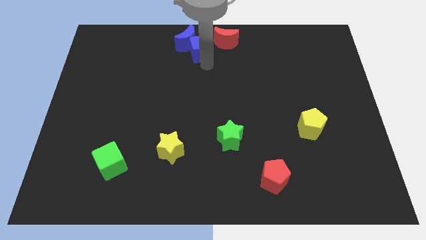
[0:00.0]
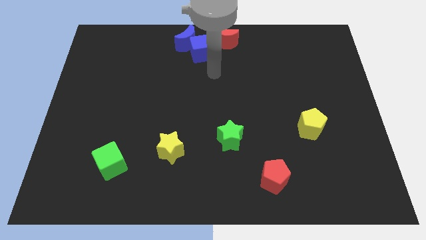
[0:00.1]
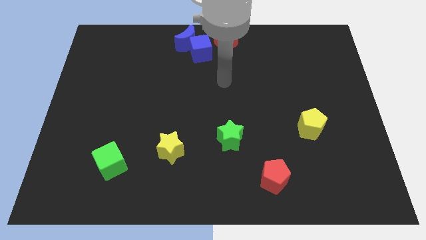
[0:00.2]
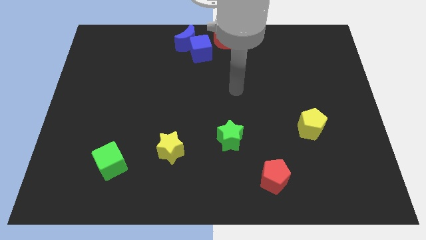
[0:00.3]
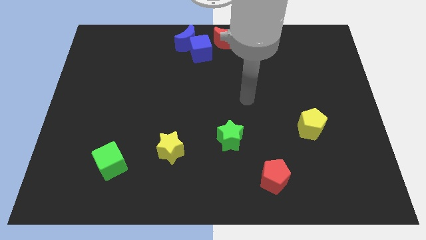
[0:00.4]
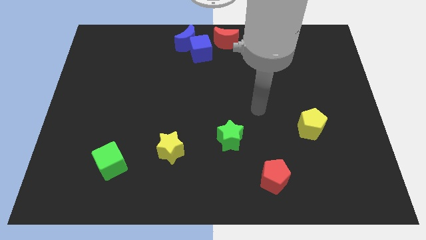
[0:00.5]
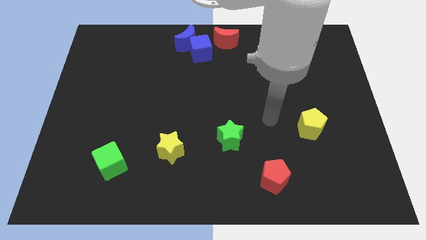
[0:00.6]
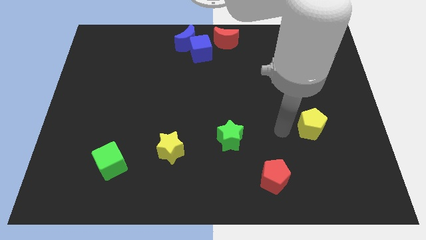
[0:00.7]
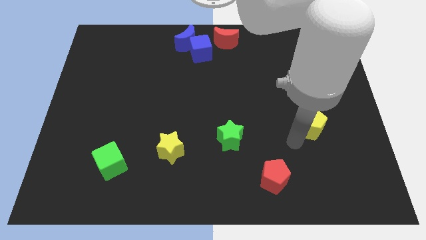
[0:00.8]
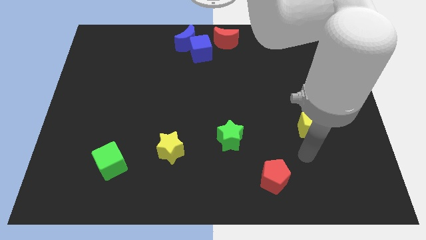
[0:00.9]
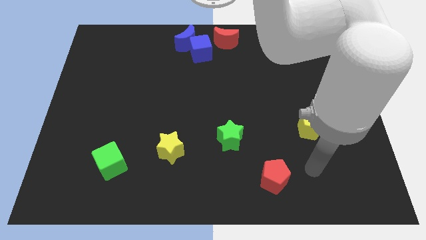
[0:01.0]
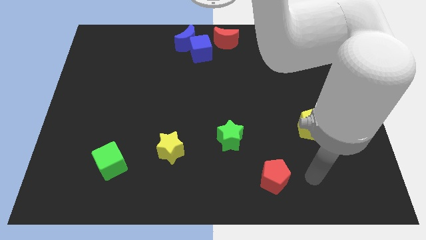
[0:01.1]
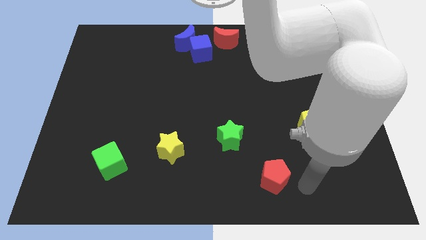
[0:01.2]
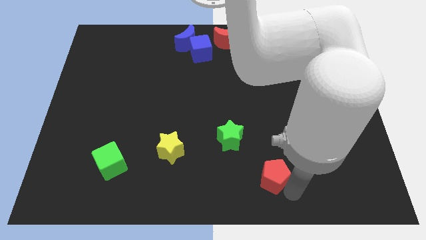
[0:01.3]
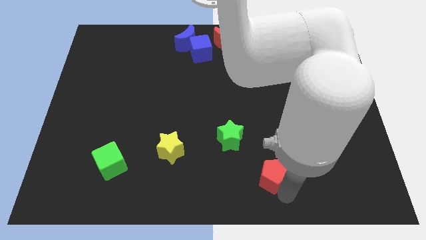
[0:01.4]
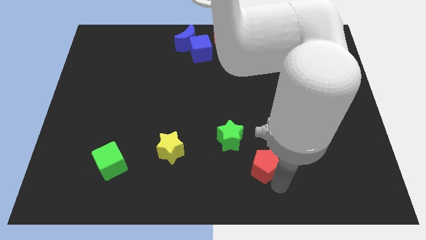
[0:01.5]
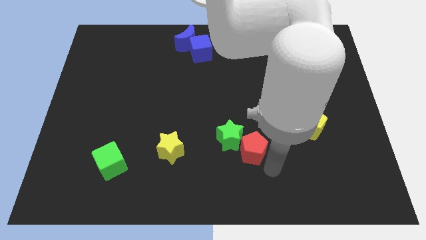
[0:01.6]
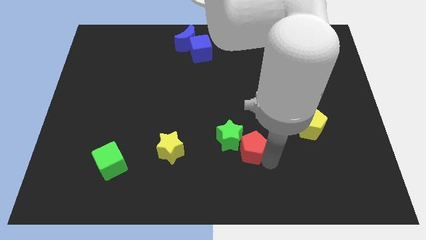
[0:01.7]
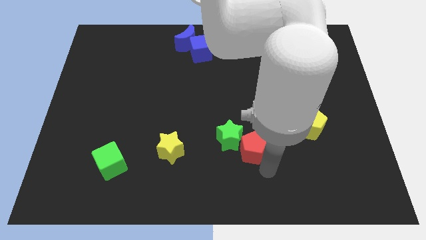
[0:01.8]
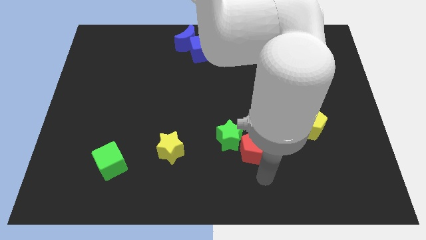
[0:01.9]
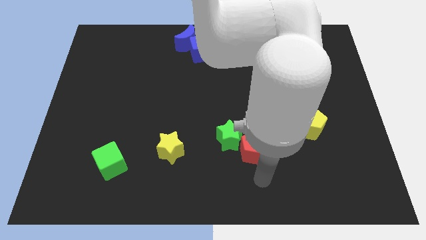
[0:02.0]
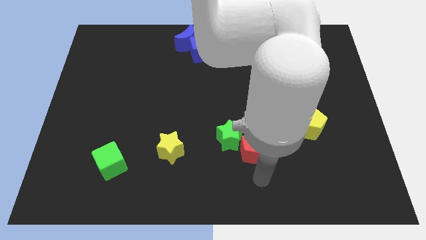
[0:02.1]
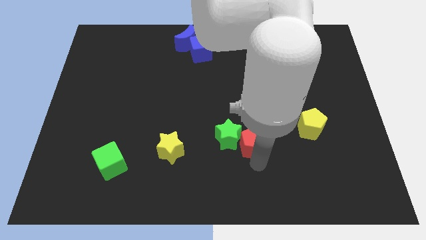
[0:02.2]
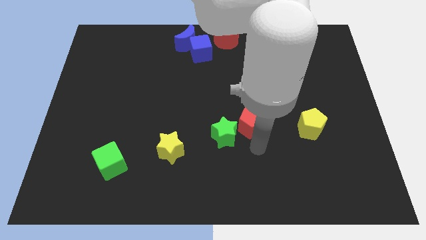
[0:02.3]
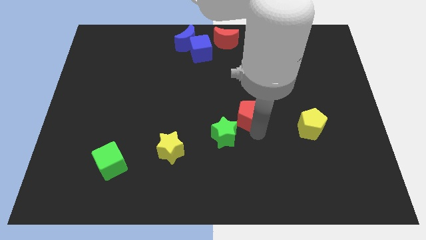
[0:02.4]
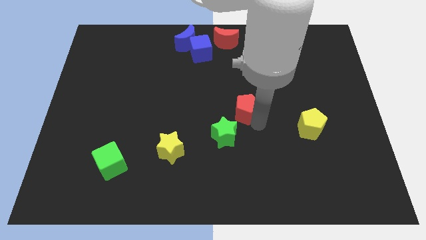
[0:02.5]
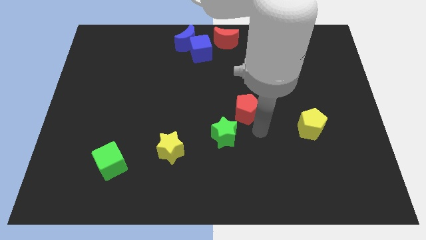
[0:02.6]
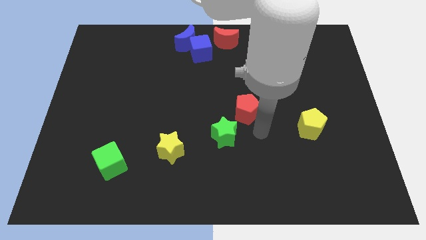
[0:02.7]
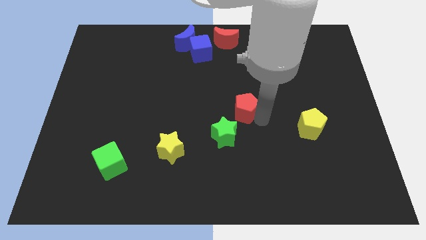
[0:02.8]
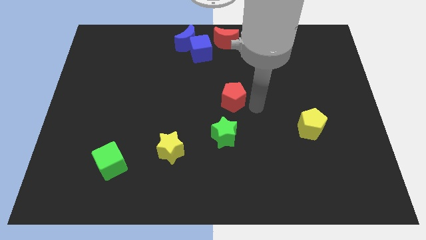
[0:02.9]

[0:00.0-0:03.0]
place the red pentagon at the center of the board

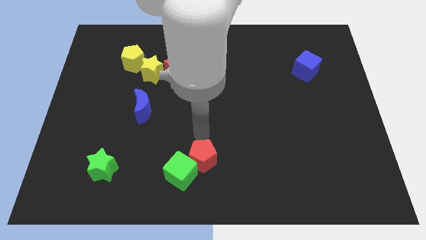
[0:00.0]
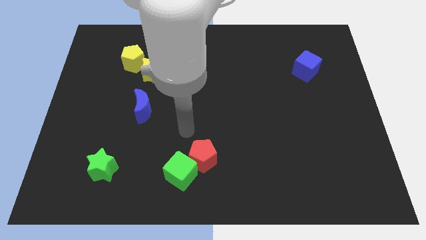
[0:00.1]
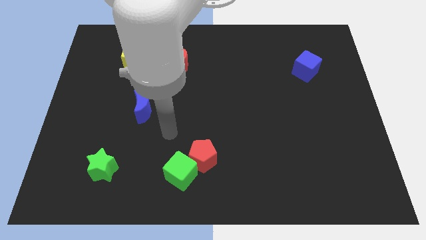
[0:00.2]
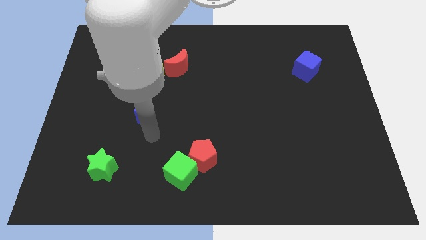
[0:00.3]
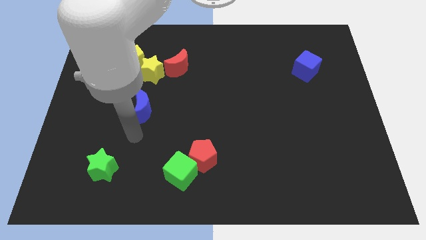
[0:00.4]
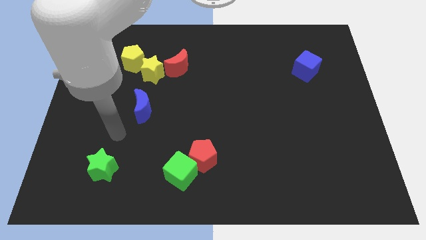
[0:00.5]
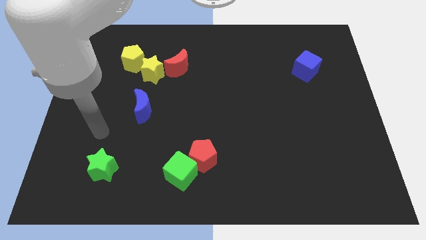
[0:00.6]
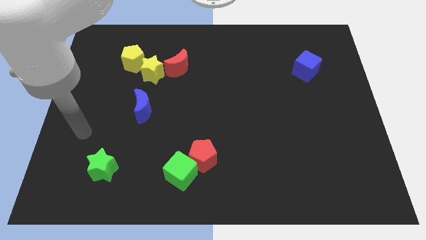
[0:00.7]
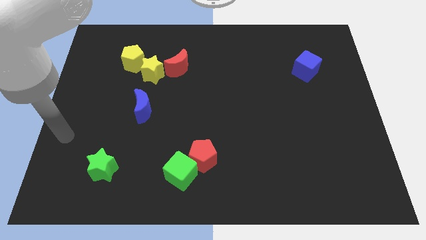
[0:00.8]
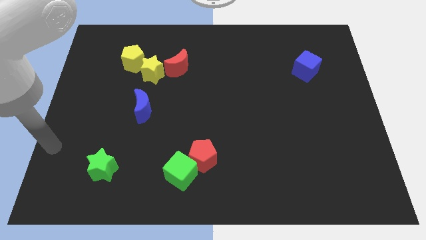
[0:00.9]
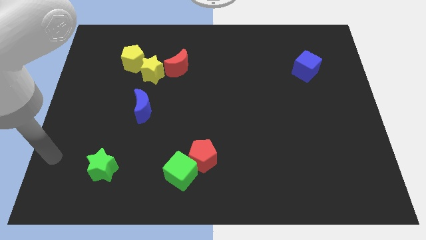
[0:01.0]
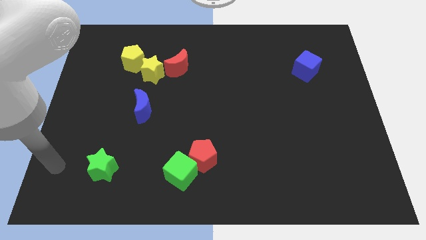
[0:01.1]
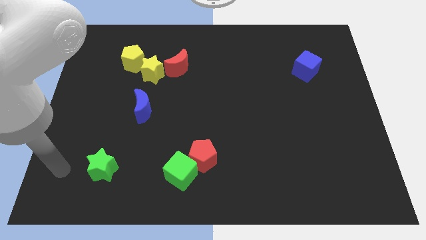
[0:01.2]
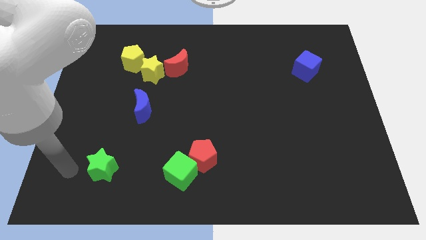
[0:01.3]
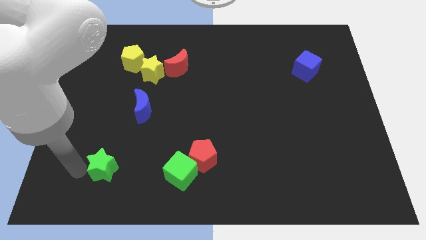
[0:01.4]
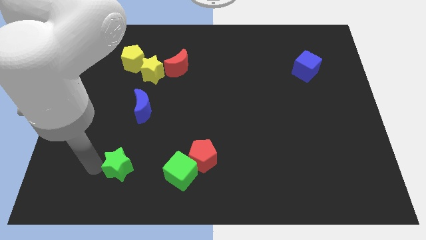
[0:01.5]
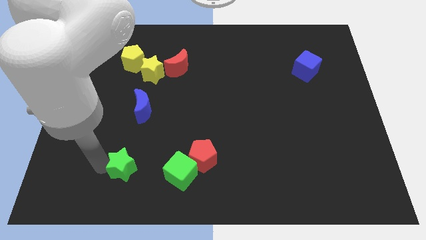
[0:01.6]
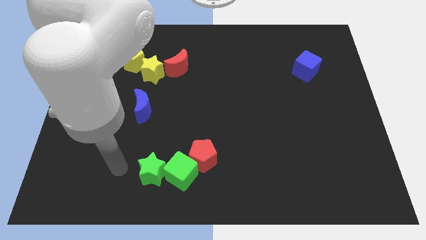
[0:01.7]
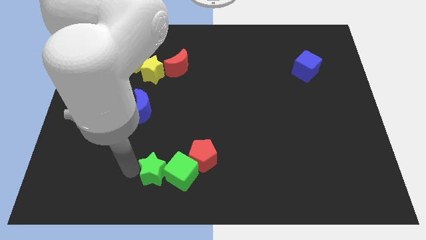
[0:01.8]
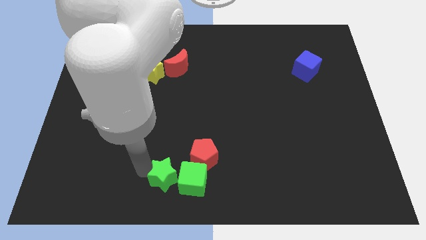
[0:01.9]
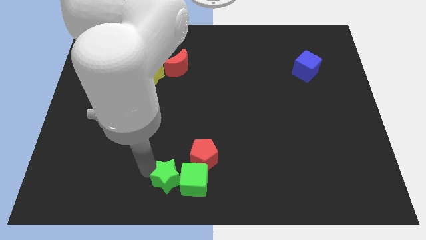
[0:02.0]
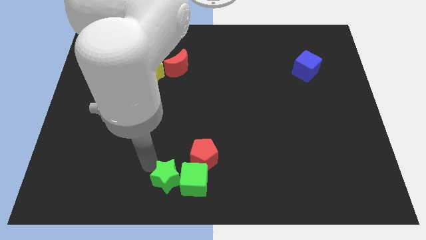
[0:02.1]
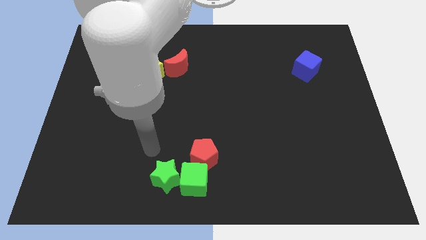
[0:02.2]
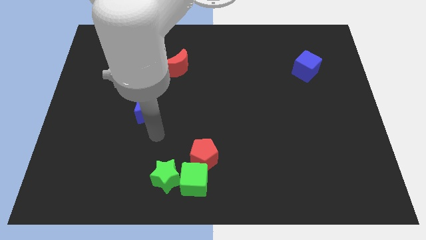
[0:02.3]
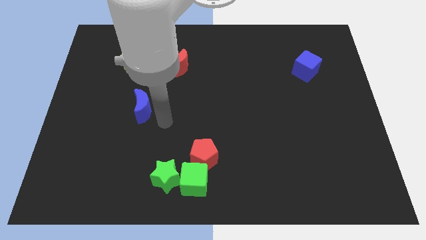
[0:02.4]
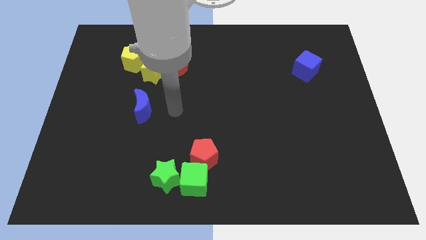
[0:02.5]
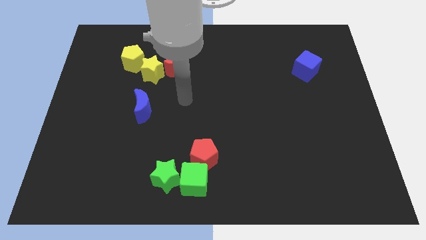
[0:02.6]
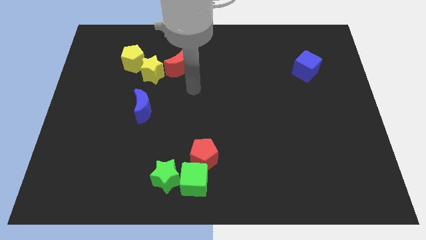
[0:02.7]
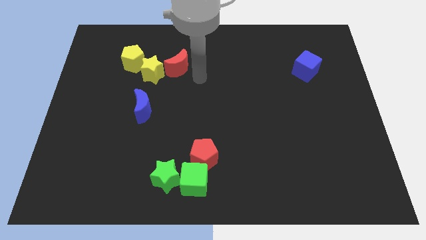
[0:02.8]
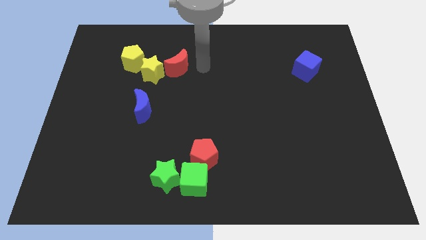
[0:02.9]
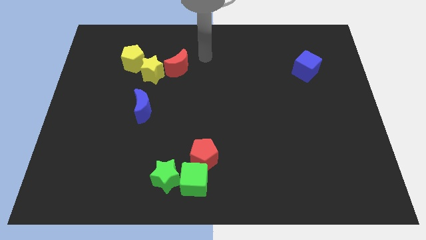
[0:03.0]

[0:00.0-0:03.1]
move green star into green cube

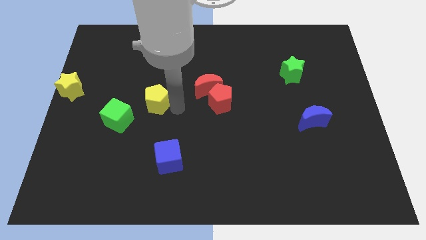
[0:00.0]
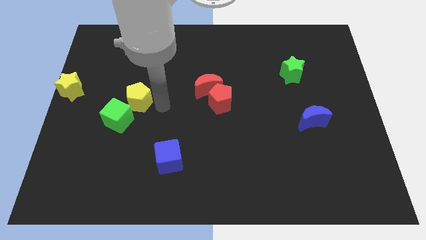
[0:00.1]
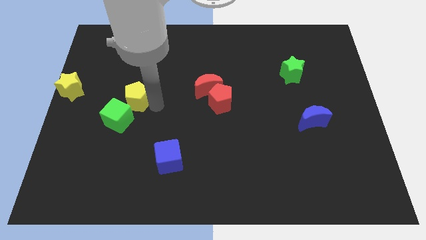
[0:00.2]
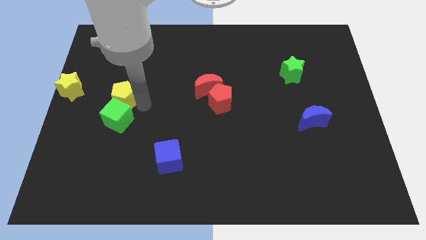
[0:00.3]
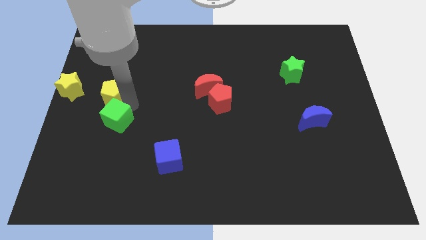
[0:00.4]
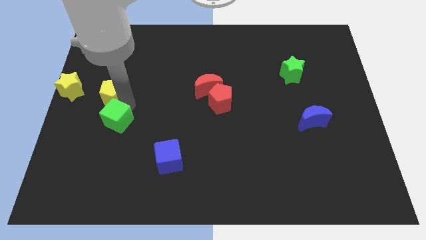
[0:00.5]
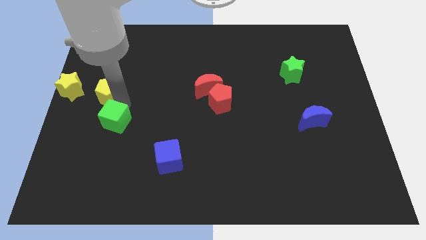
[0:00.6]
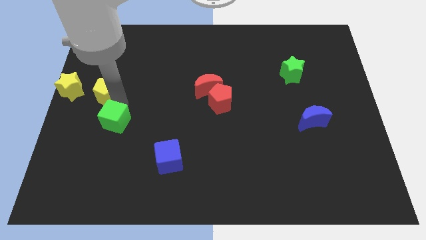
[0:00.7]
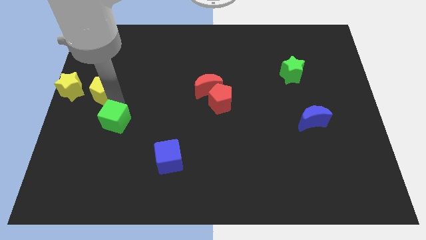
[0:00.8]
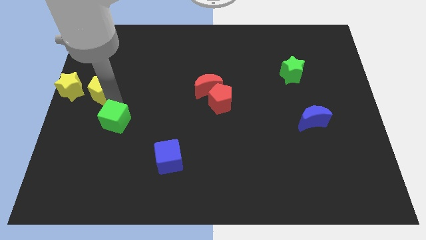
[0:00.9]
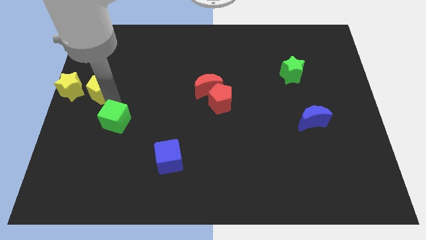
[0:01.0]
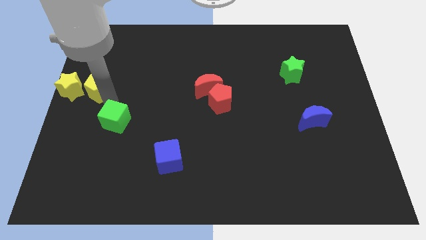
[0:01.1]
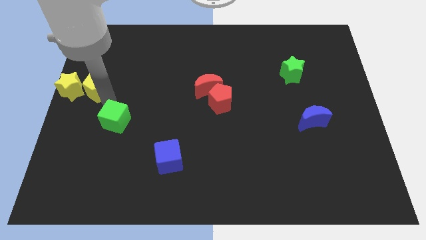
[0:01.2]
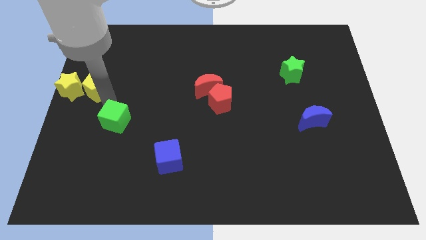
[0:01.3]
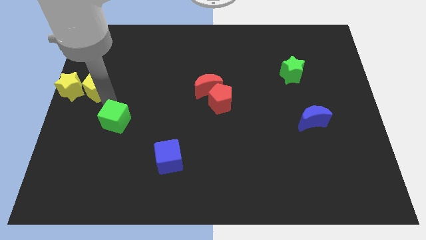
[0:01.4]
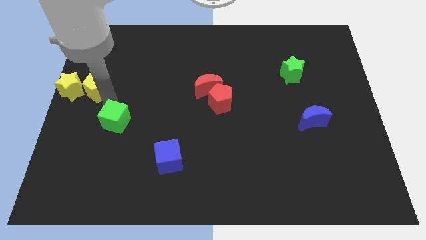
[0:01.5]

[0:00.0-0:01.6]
push the yellow pentagon close to the yellow star

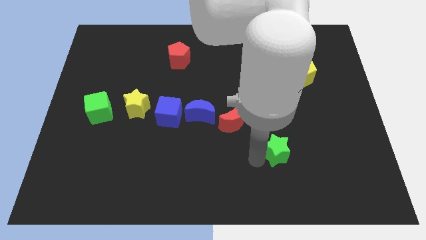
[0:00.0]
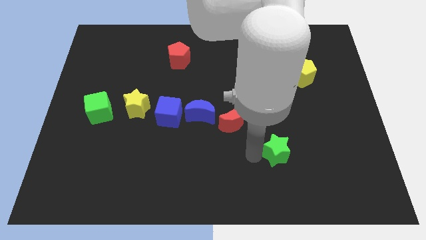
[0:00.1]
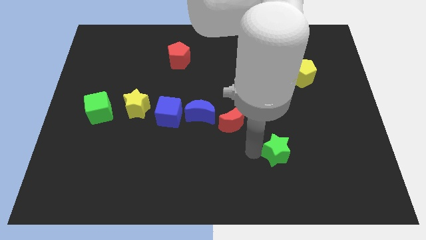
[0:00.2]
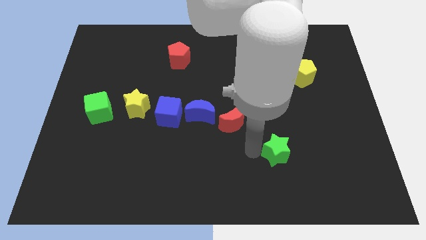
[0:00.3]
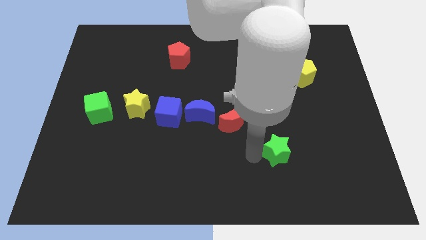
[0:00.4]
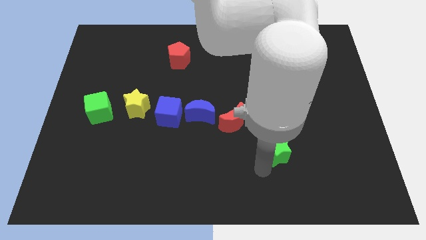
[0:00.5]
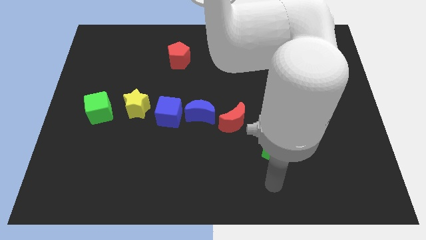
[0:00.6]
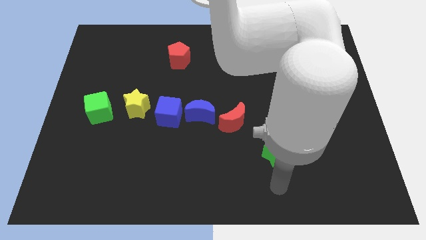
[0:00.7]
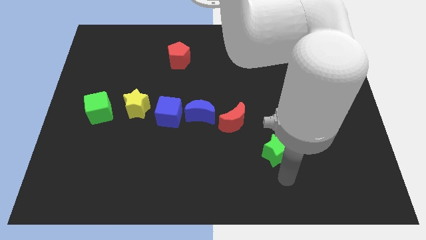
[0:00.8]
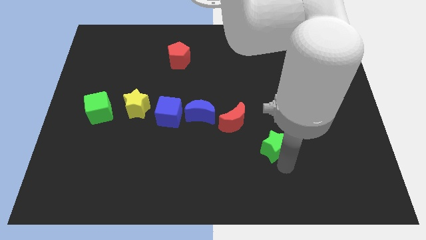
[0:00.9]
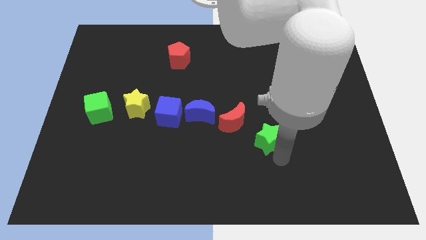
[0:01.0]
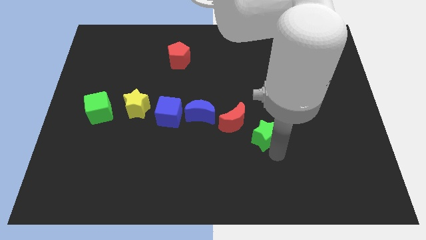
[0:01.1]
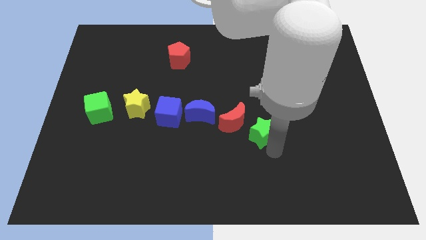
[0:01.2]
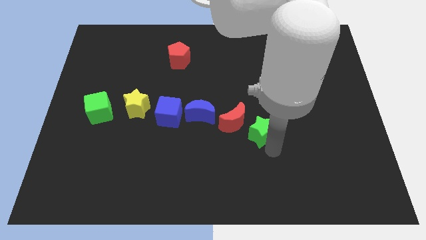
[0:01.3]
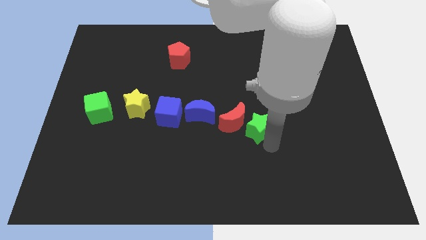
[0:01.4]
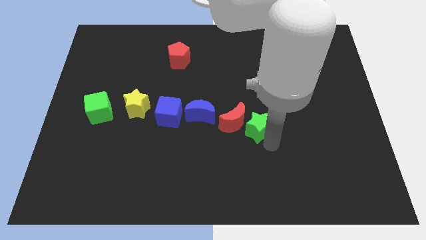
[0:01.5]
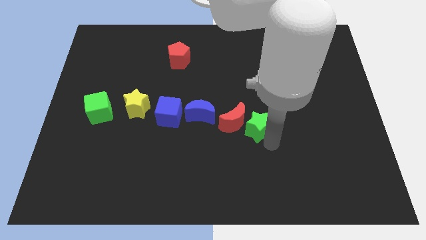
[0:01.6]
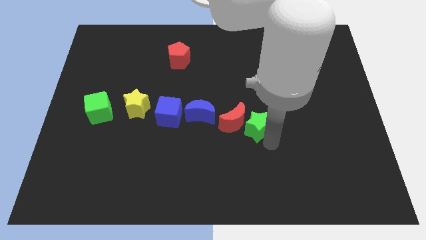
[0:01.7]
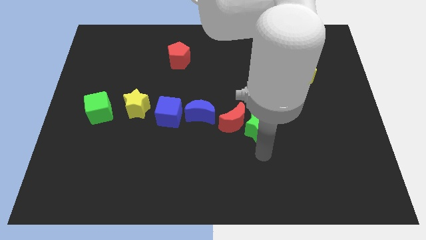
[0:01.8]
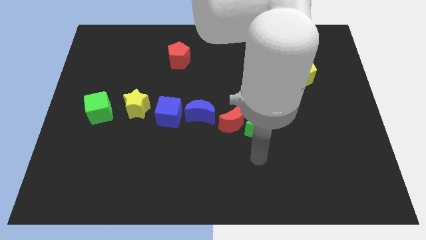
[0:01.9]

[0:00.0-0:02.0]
place the green star to the right of the red crescent
